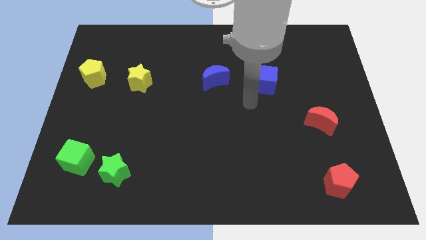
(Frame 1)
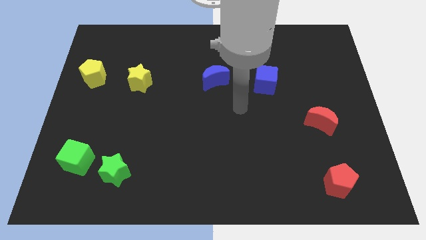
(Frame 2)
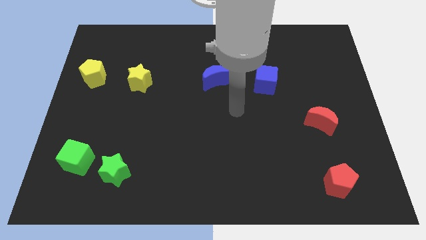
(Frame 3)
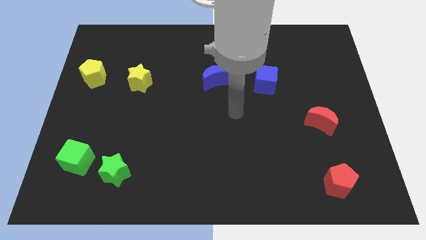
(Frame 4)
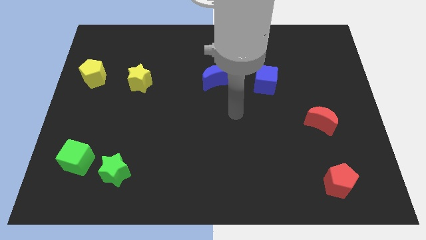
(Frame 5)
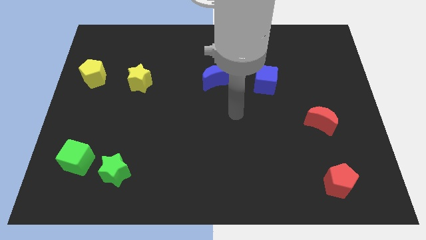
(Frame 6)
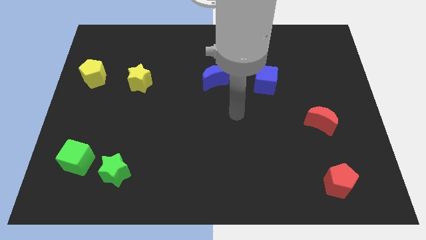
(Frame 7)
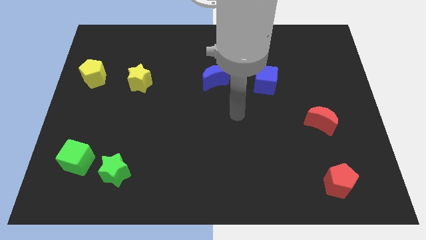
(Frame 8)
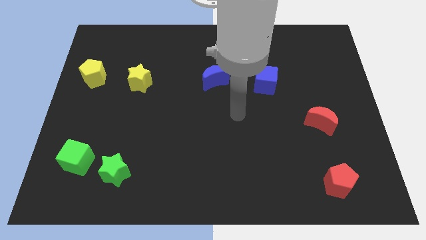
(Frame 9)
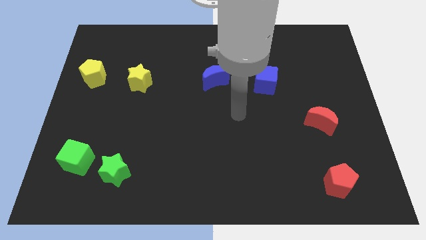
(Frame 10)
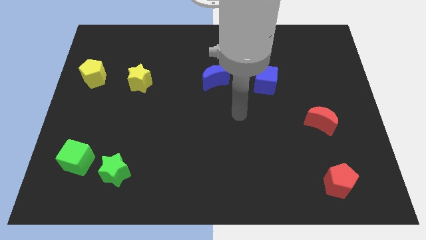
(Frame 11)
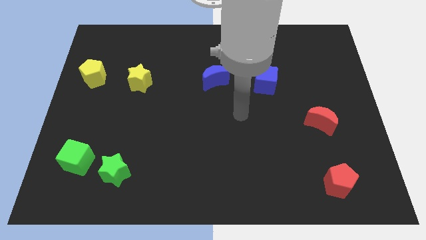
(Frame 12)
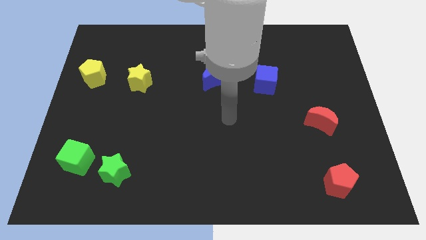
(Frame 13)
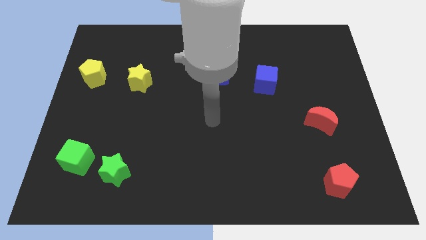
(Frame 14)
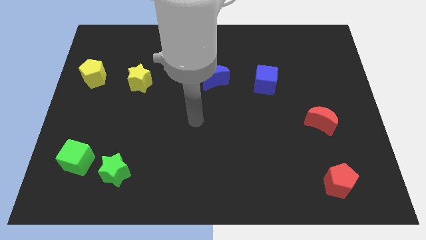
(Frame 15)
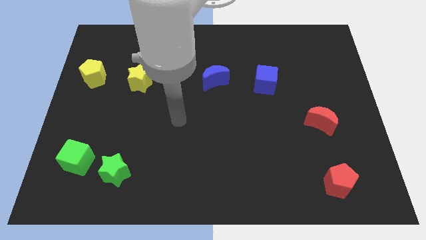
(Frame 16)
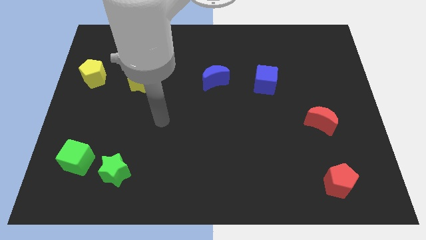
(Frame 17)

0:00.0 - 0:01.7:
move your arm away from the blue cube

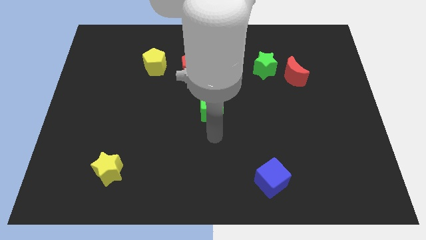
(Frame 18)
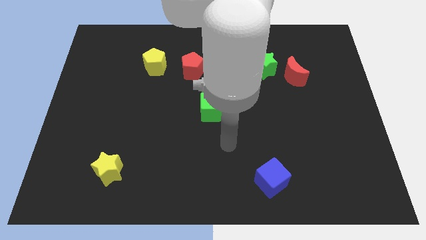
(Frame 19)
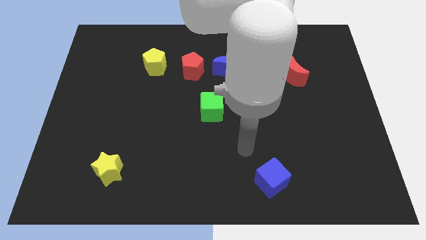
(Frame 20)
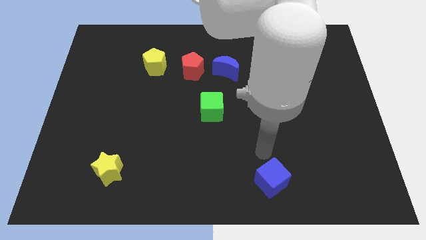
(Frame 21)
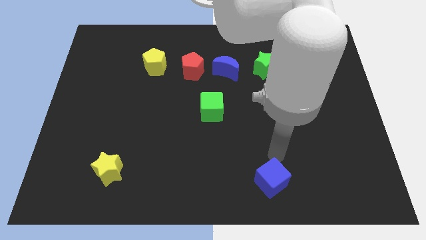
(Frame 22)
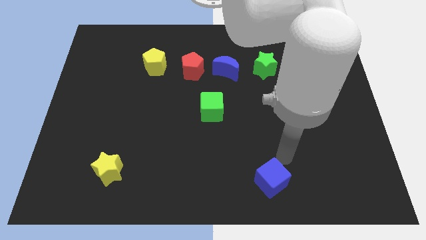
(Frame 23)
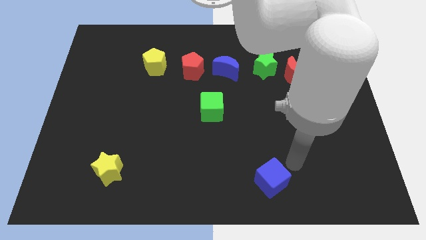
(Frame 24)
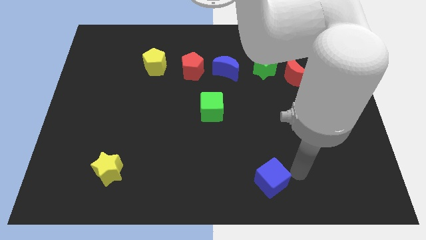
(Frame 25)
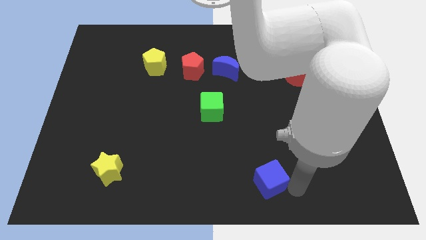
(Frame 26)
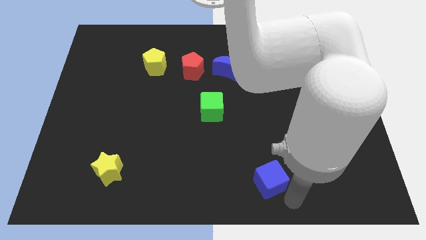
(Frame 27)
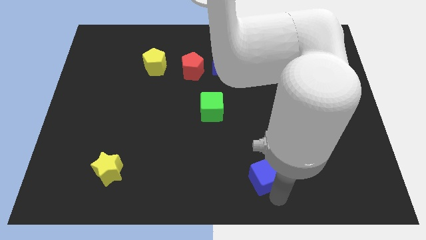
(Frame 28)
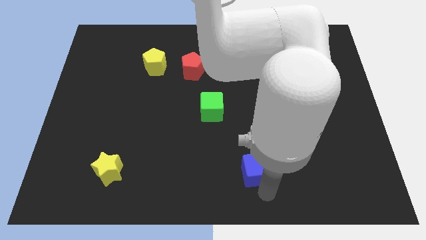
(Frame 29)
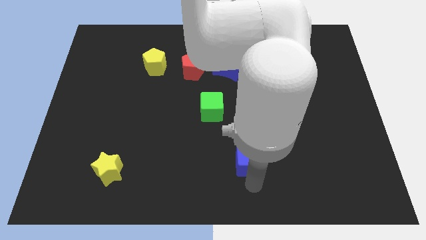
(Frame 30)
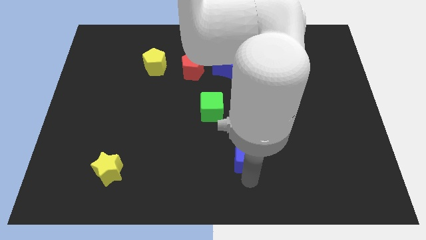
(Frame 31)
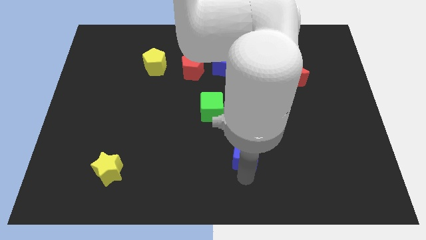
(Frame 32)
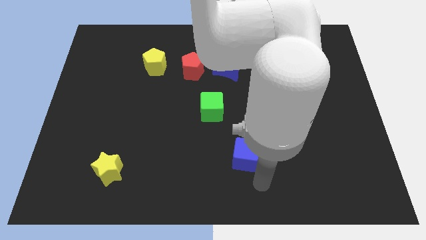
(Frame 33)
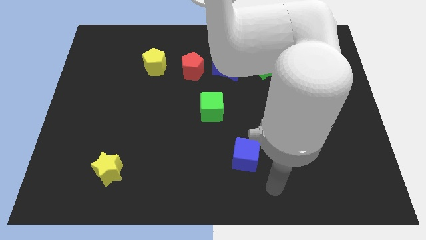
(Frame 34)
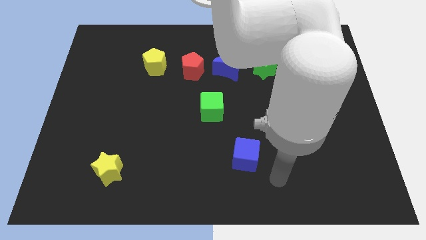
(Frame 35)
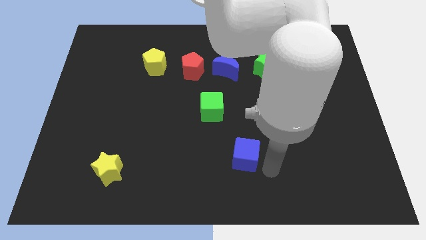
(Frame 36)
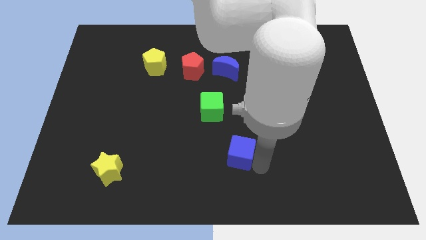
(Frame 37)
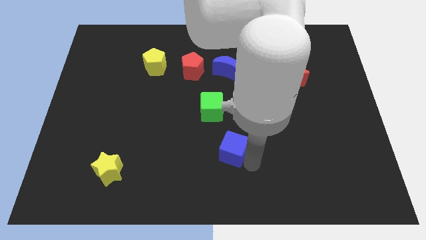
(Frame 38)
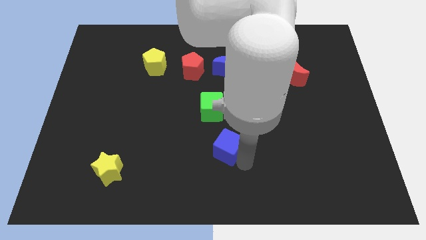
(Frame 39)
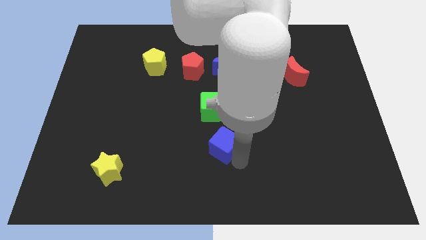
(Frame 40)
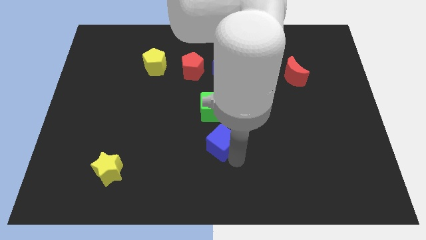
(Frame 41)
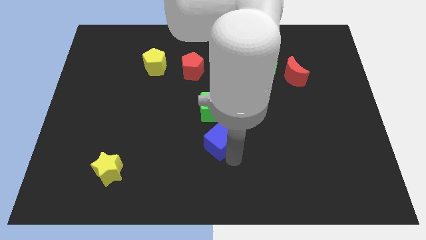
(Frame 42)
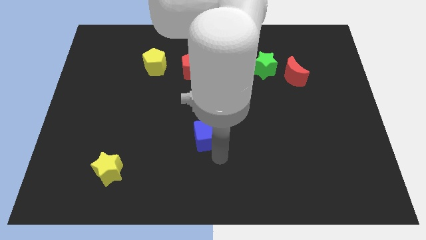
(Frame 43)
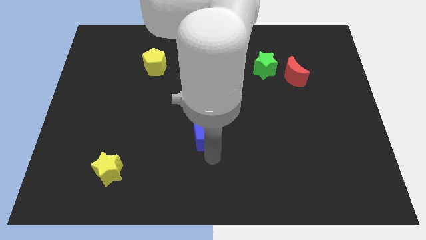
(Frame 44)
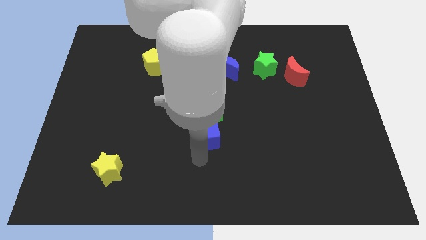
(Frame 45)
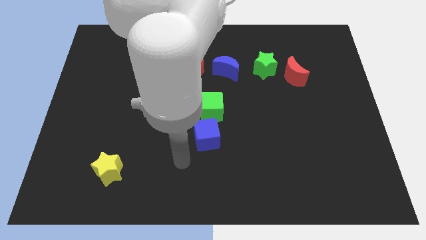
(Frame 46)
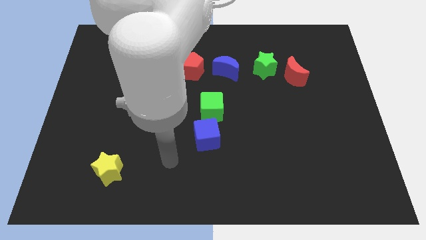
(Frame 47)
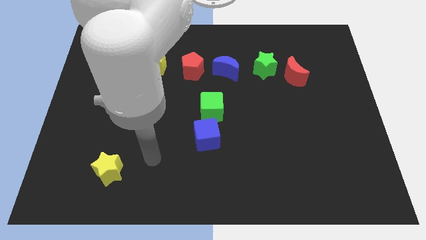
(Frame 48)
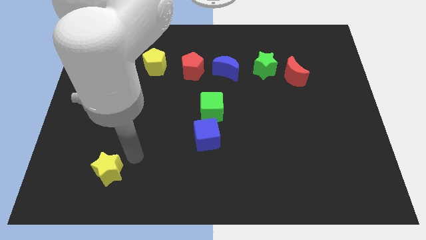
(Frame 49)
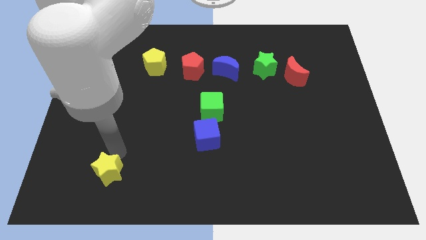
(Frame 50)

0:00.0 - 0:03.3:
place the blue cube below the green cube

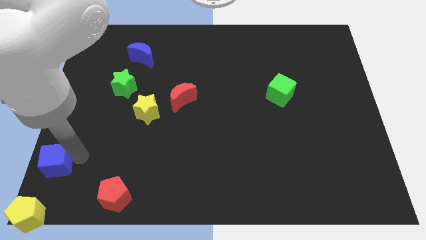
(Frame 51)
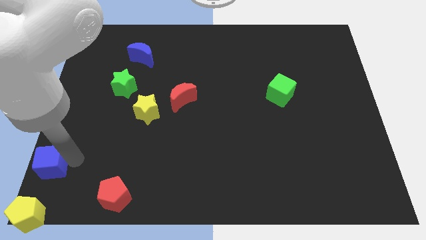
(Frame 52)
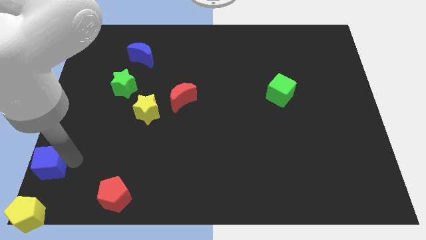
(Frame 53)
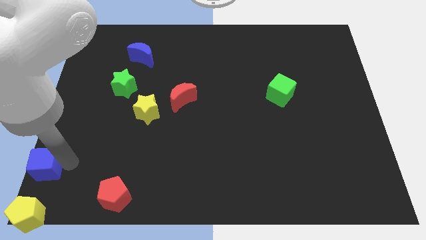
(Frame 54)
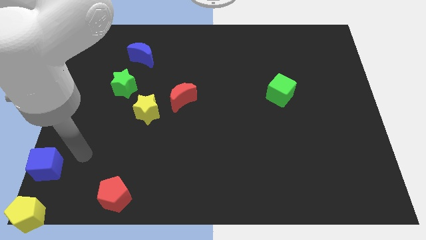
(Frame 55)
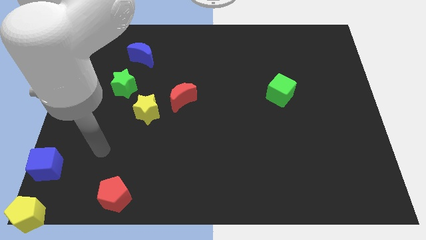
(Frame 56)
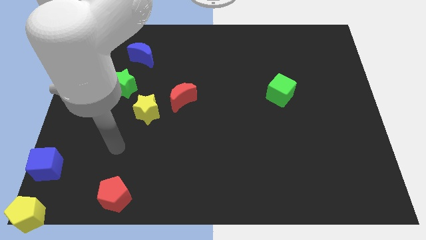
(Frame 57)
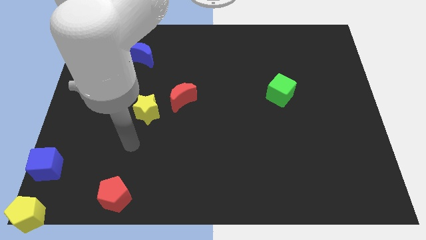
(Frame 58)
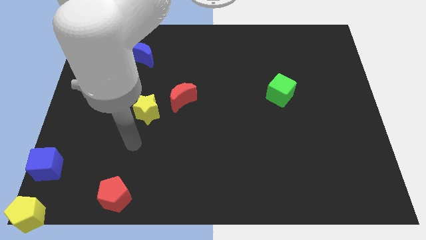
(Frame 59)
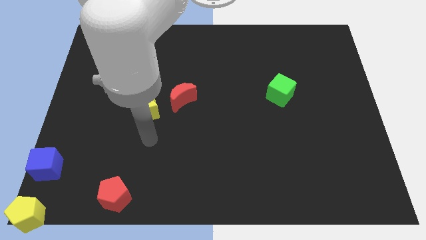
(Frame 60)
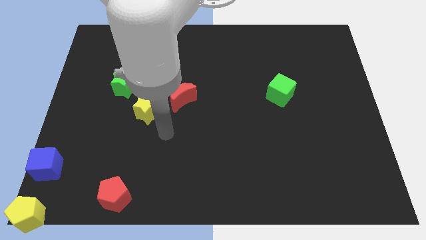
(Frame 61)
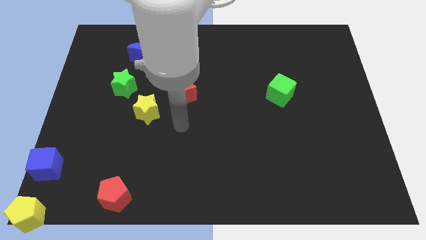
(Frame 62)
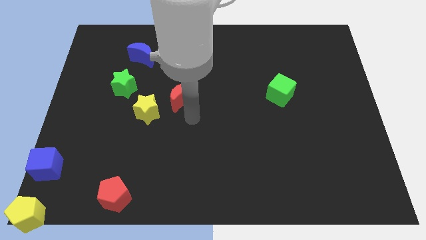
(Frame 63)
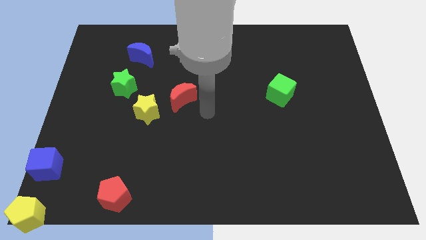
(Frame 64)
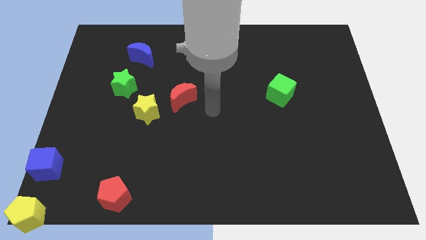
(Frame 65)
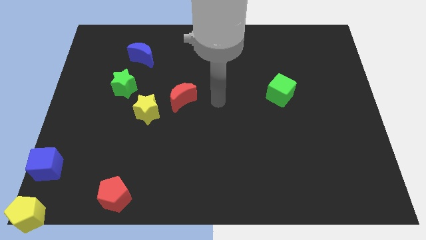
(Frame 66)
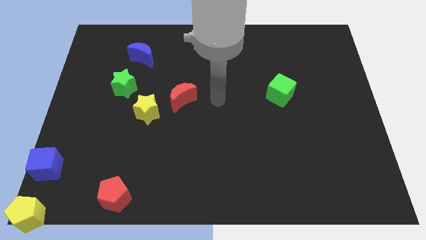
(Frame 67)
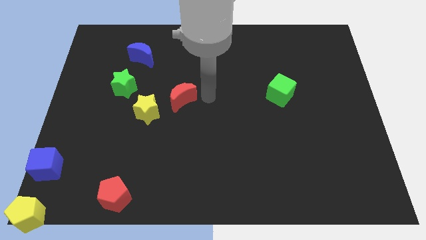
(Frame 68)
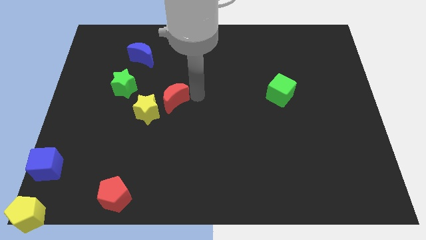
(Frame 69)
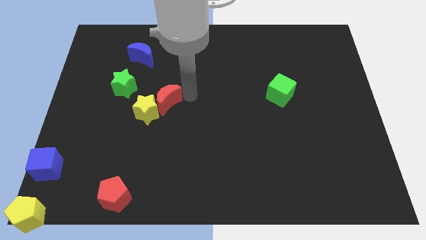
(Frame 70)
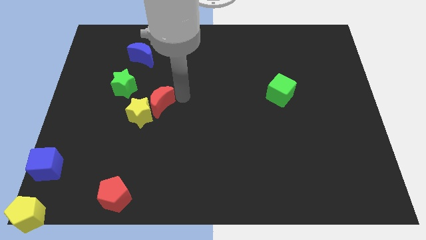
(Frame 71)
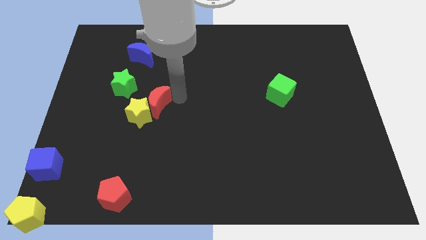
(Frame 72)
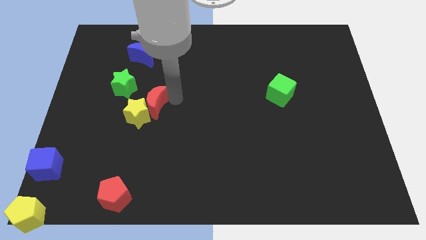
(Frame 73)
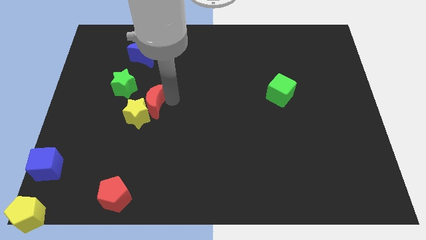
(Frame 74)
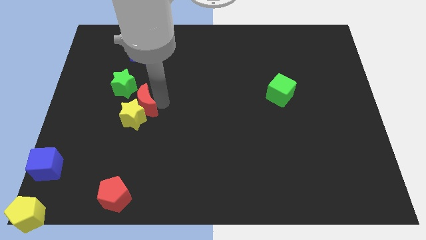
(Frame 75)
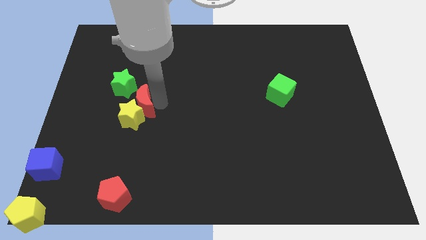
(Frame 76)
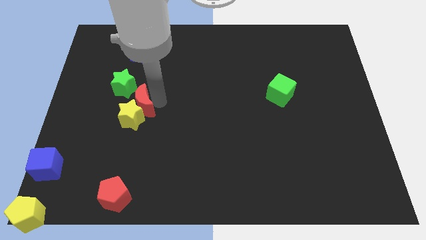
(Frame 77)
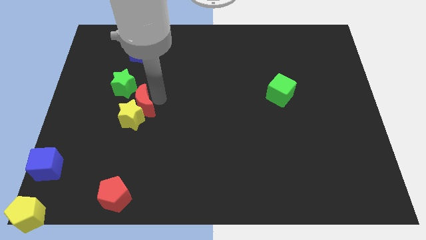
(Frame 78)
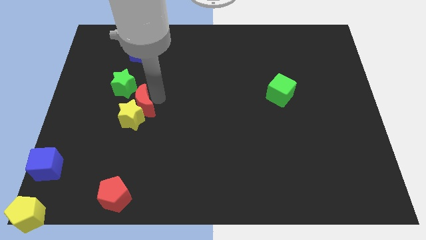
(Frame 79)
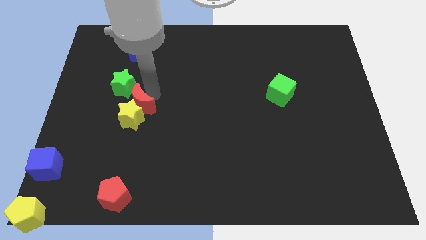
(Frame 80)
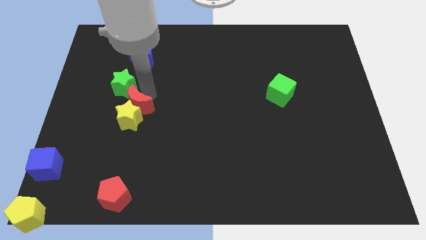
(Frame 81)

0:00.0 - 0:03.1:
push red crescent into the yellow star

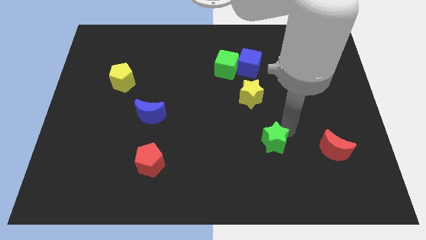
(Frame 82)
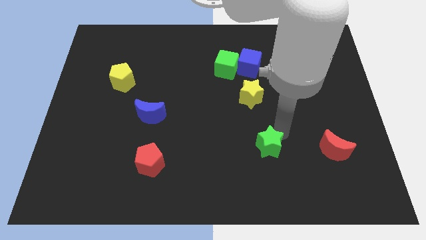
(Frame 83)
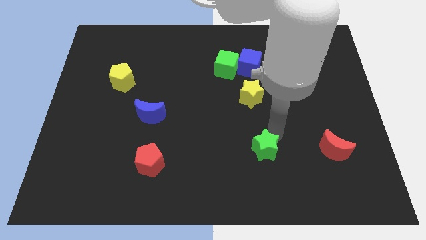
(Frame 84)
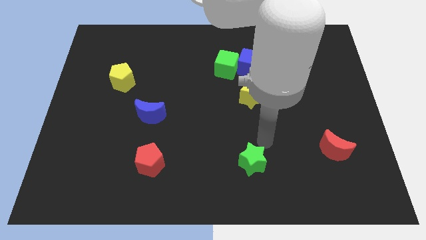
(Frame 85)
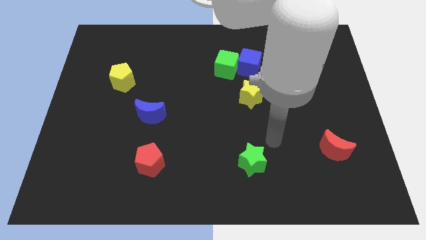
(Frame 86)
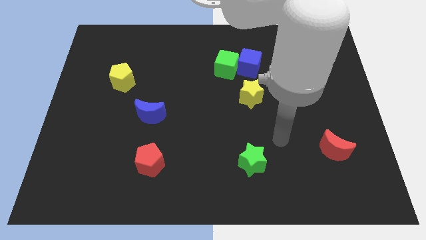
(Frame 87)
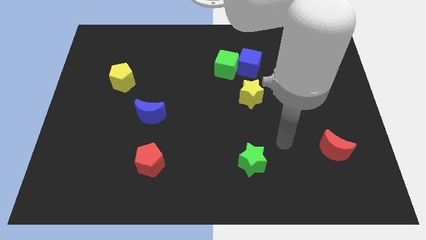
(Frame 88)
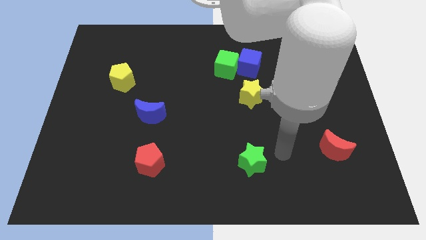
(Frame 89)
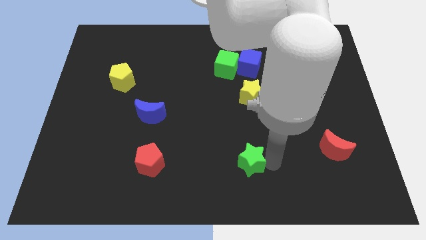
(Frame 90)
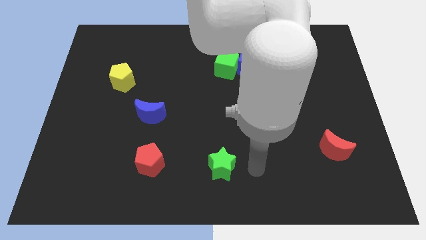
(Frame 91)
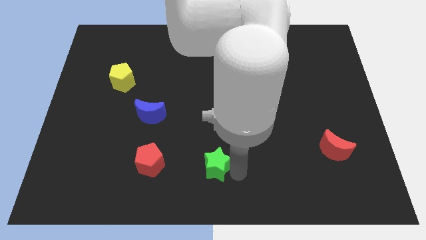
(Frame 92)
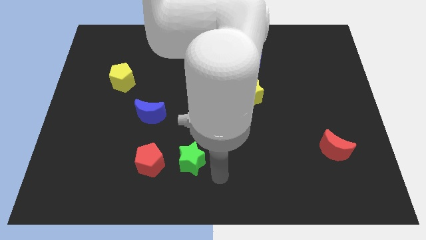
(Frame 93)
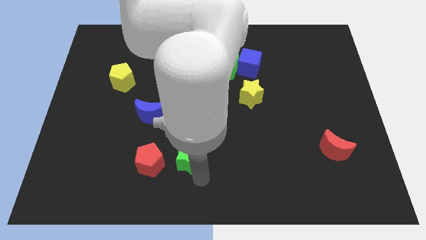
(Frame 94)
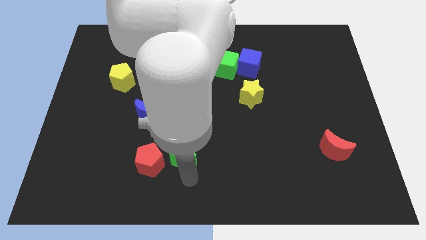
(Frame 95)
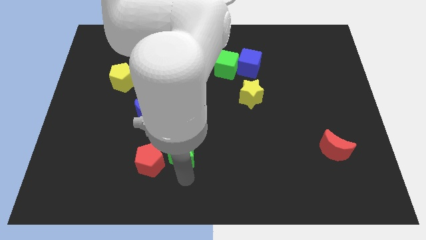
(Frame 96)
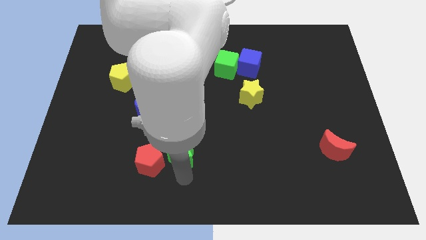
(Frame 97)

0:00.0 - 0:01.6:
push the green star close to the right side of the red pentagon
